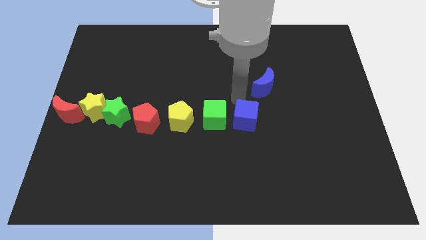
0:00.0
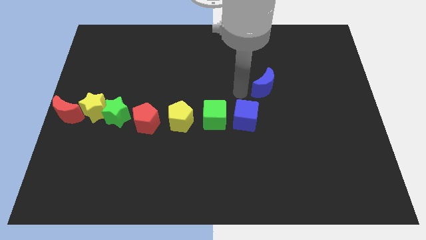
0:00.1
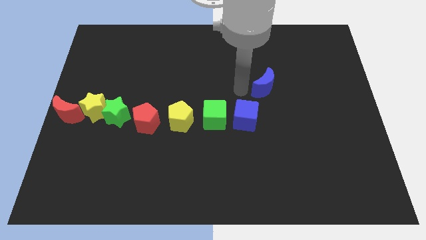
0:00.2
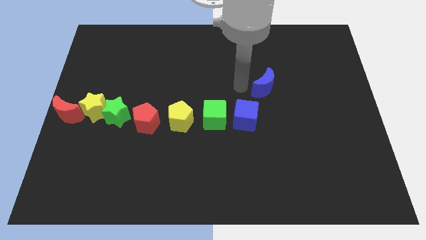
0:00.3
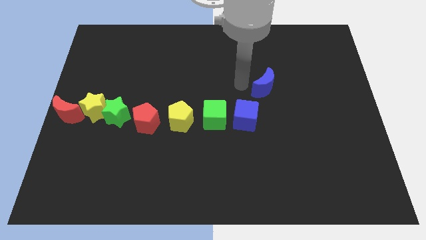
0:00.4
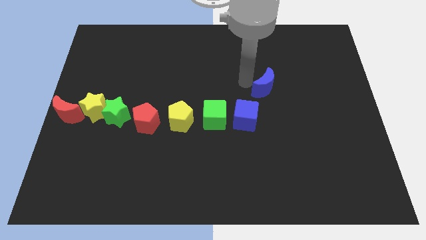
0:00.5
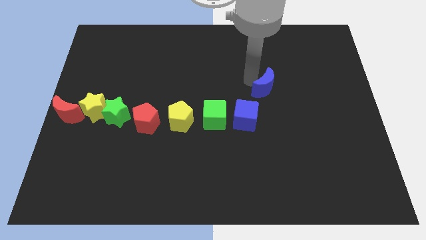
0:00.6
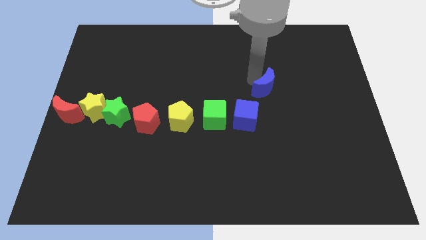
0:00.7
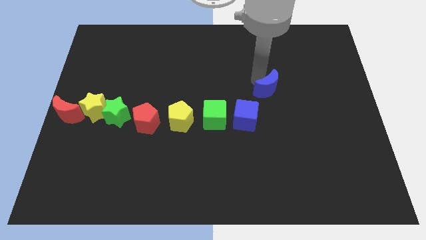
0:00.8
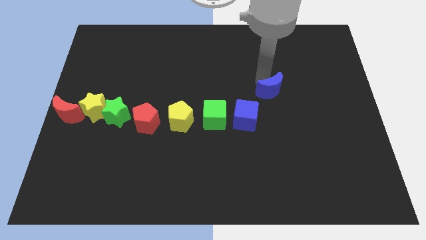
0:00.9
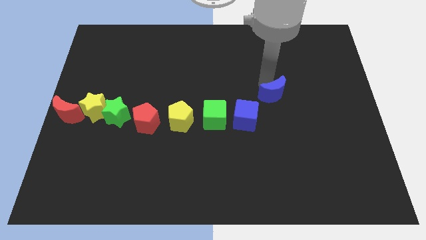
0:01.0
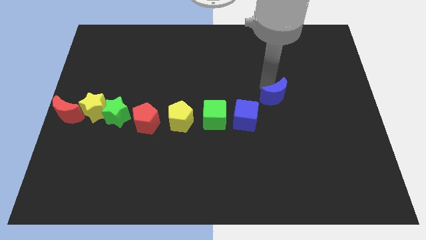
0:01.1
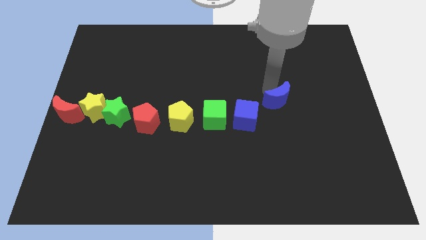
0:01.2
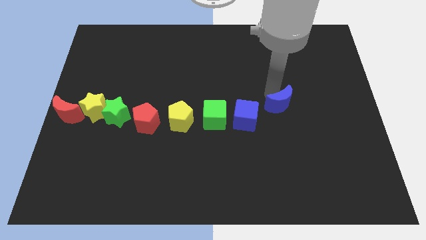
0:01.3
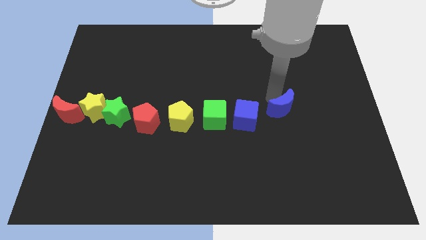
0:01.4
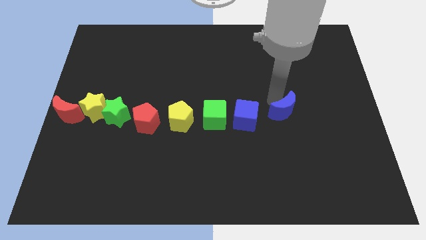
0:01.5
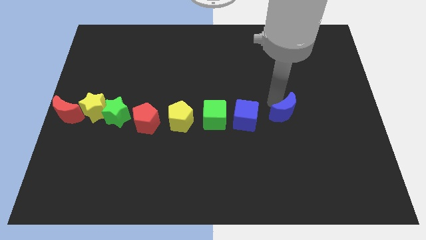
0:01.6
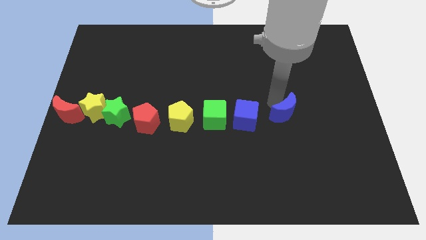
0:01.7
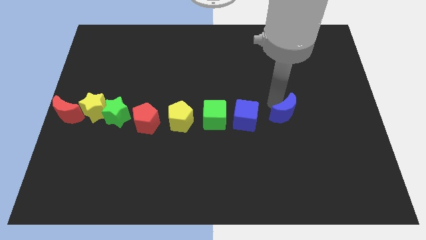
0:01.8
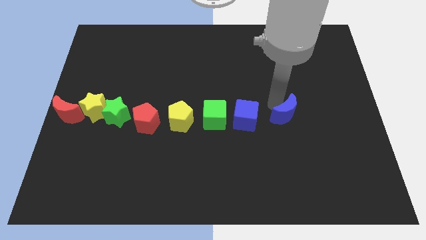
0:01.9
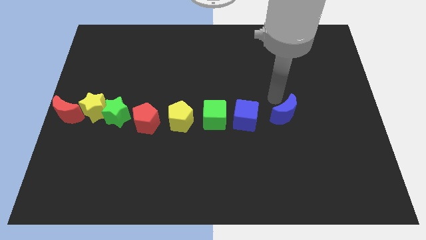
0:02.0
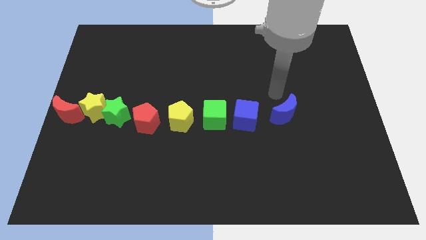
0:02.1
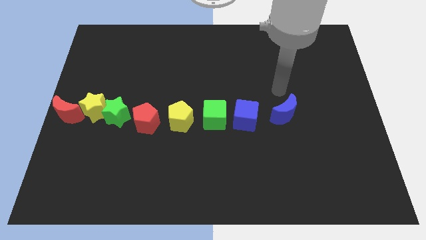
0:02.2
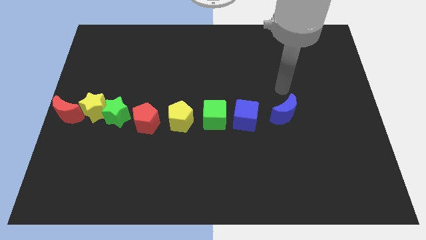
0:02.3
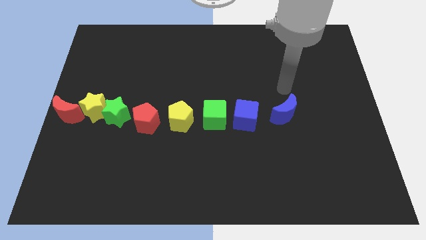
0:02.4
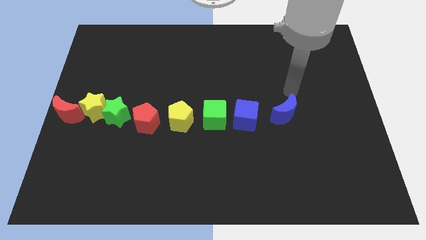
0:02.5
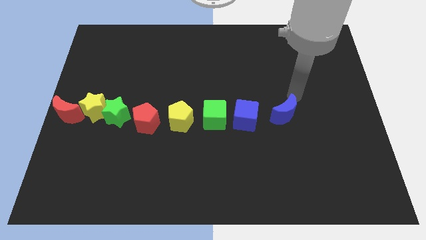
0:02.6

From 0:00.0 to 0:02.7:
push the blue crescent to the right of the blue cube

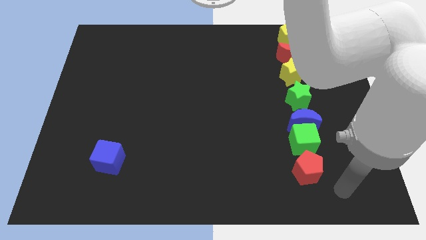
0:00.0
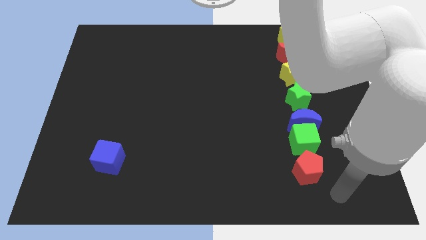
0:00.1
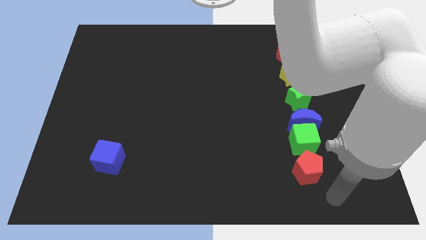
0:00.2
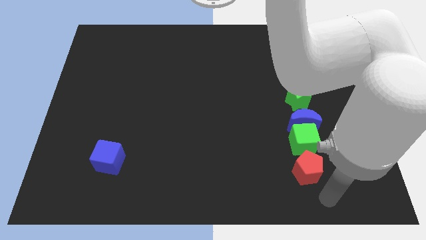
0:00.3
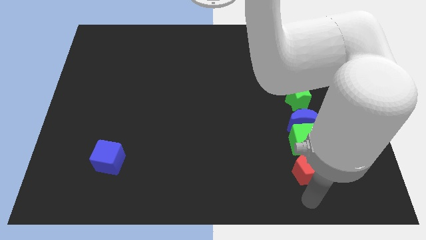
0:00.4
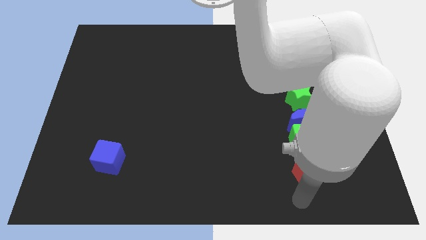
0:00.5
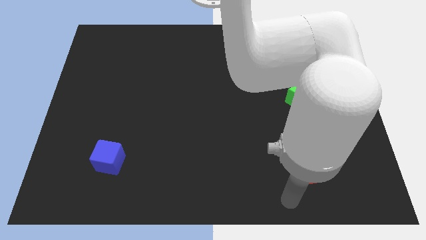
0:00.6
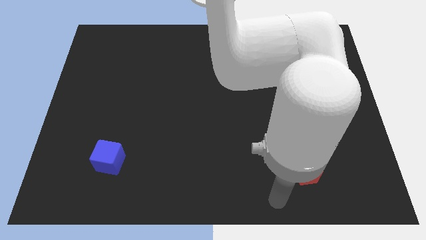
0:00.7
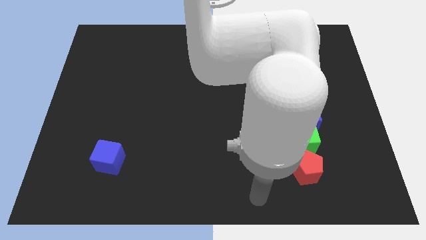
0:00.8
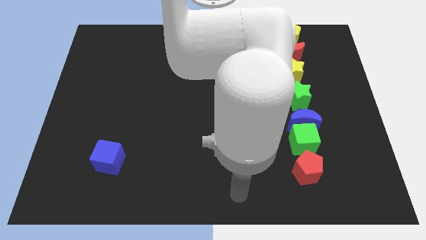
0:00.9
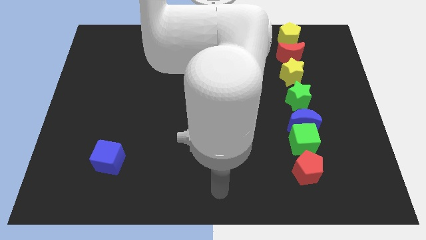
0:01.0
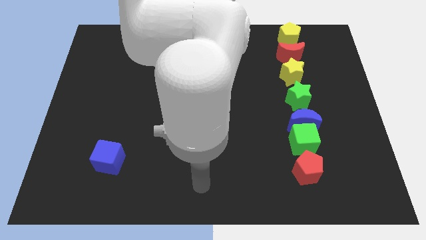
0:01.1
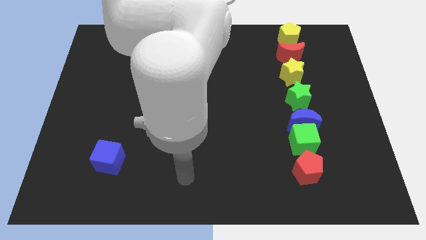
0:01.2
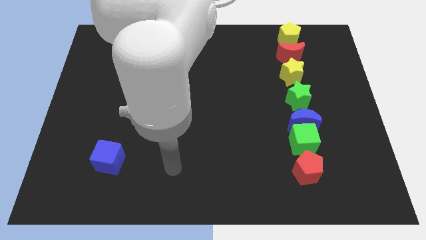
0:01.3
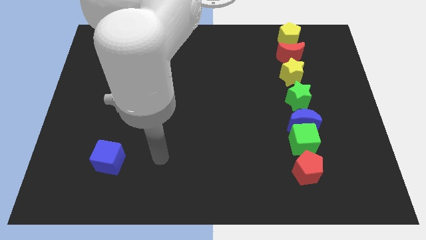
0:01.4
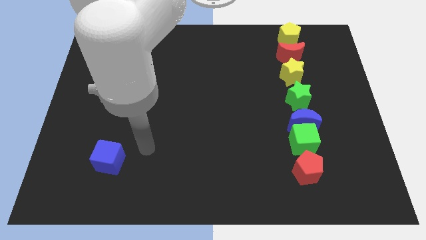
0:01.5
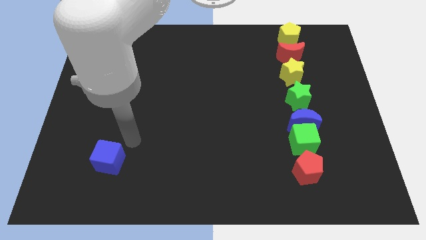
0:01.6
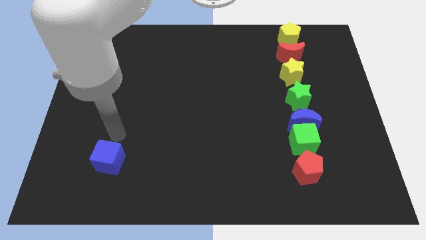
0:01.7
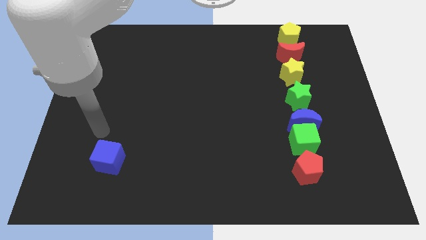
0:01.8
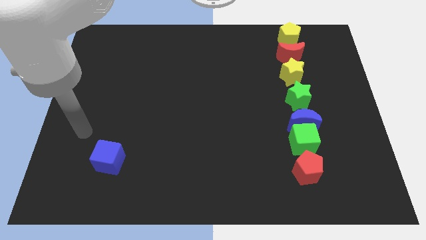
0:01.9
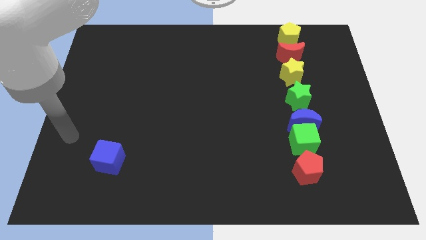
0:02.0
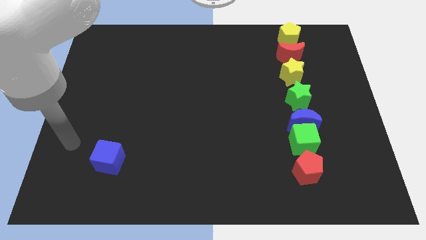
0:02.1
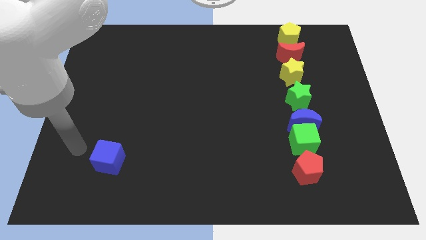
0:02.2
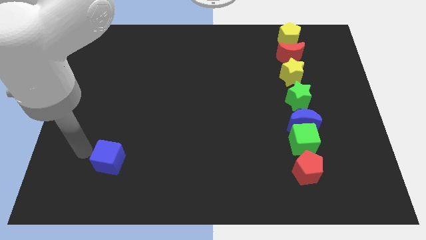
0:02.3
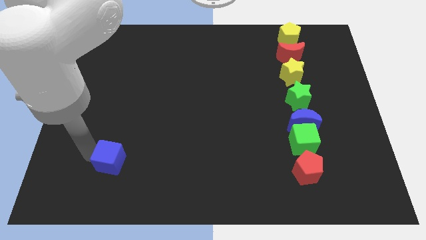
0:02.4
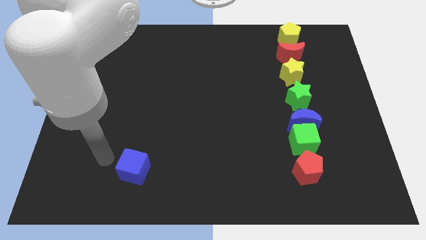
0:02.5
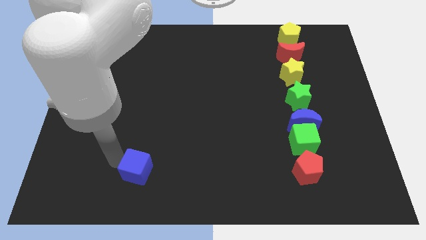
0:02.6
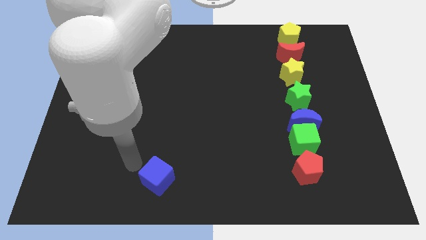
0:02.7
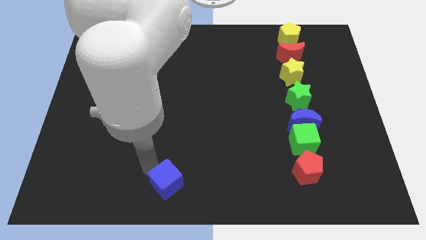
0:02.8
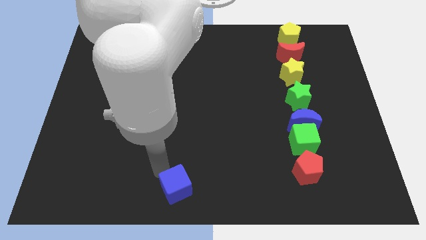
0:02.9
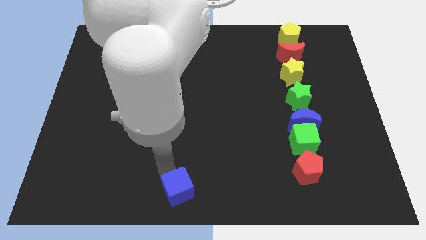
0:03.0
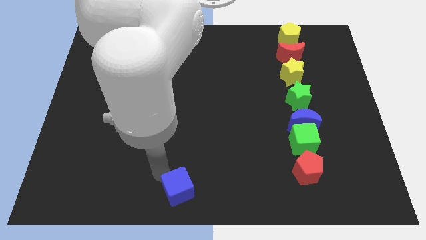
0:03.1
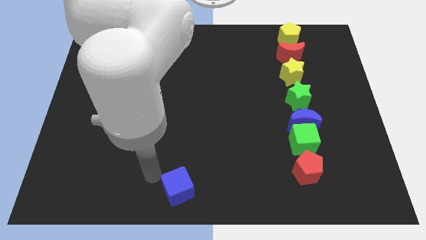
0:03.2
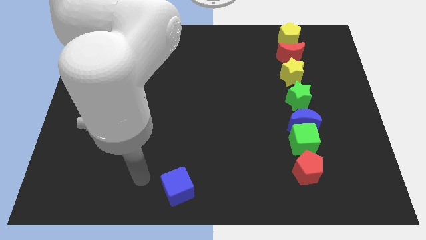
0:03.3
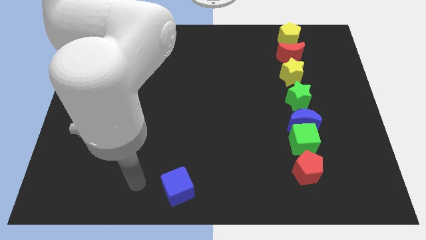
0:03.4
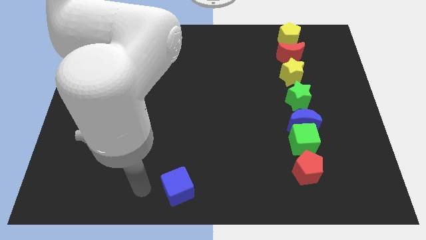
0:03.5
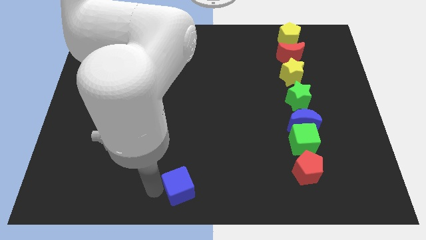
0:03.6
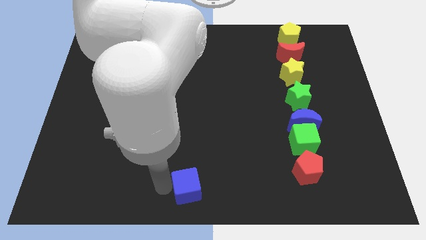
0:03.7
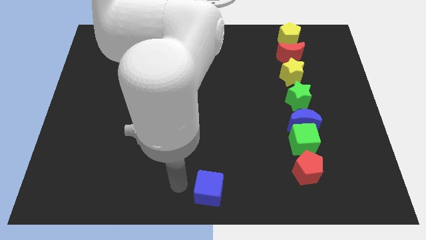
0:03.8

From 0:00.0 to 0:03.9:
push the blue cube to the bottom center of the board

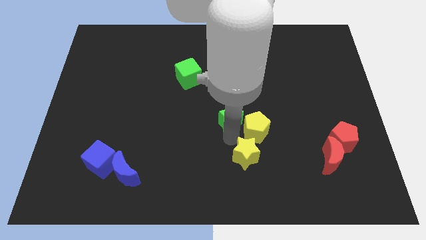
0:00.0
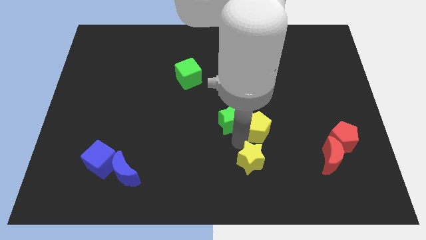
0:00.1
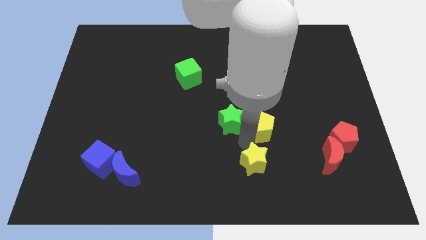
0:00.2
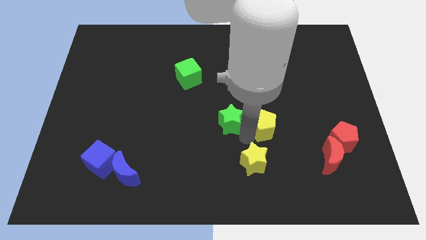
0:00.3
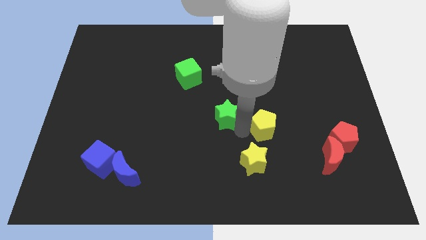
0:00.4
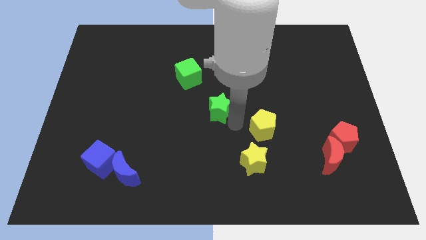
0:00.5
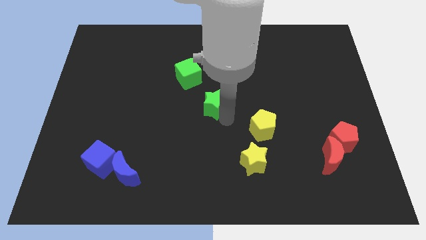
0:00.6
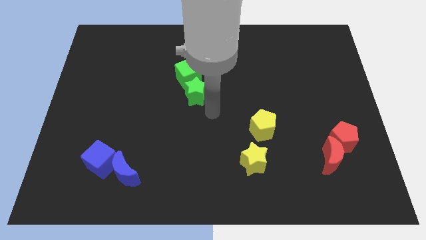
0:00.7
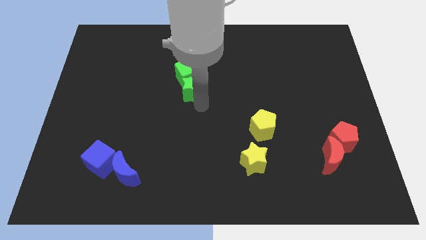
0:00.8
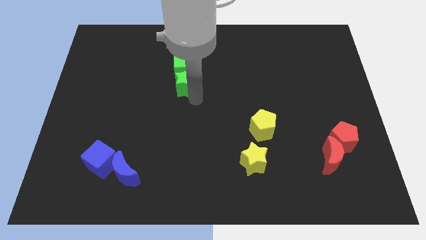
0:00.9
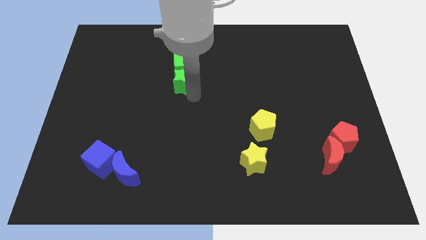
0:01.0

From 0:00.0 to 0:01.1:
push the green star into the green cube

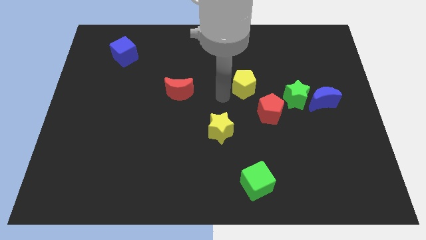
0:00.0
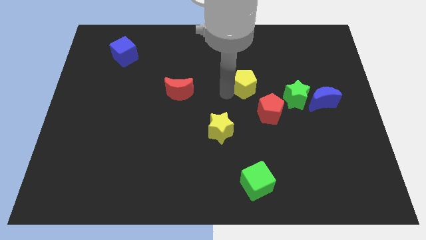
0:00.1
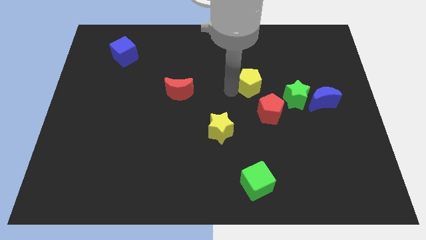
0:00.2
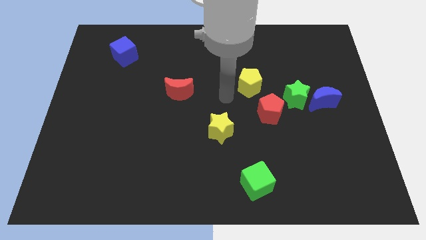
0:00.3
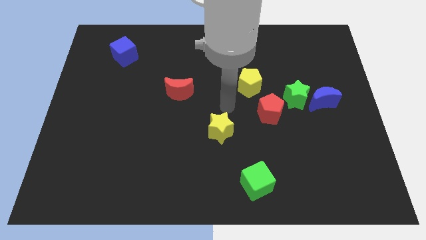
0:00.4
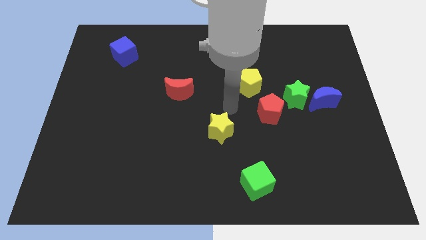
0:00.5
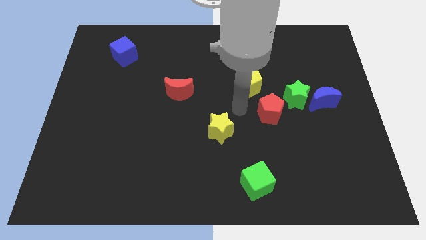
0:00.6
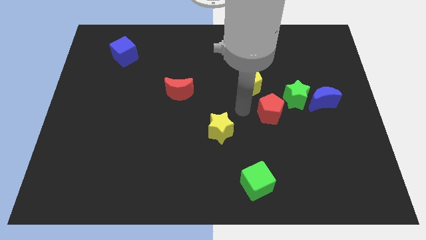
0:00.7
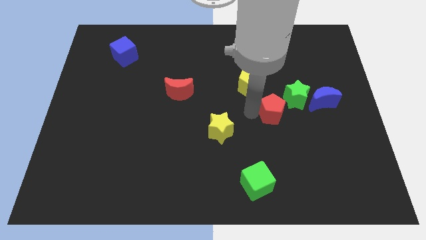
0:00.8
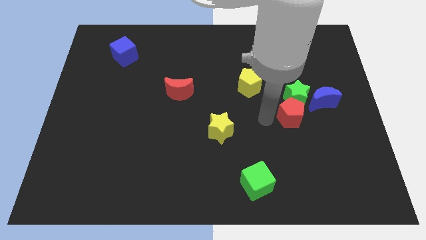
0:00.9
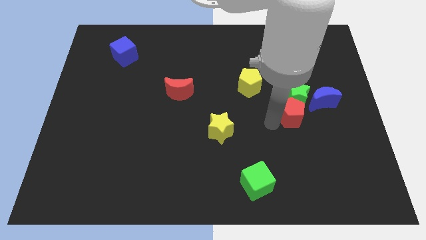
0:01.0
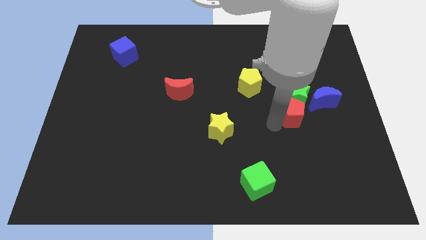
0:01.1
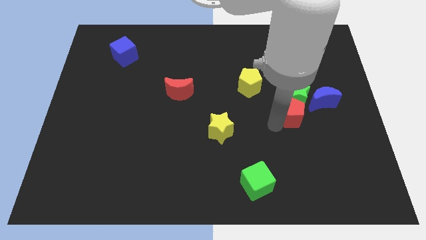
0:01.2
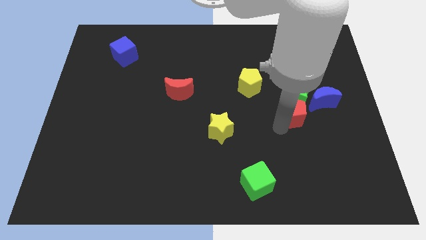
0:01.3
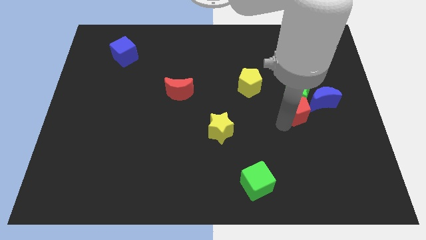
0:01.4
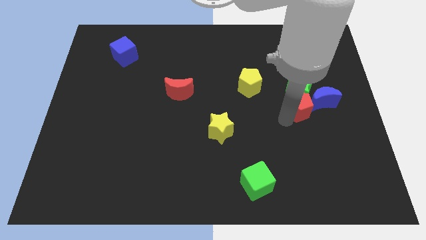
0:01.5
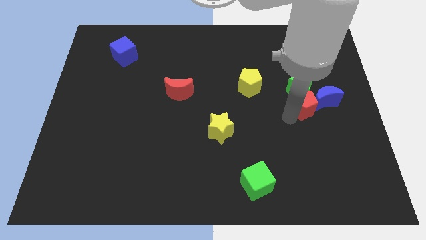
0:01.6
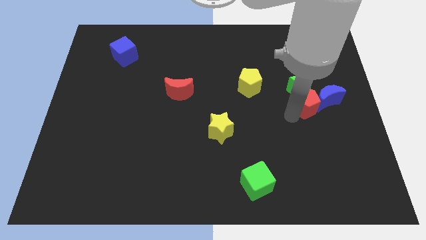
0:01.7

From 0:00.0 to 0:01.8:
move the red pentagon vertically below the green star
